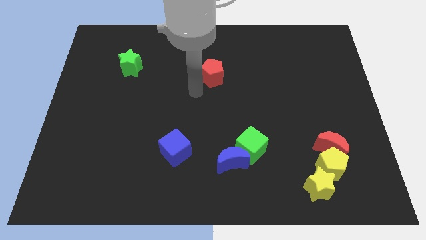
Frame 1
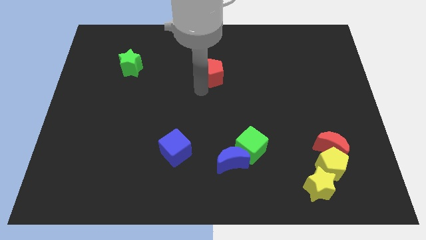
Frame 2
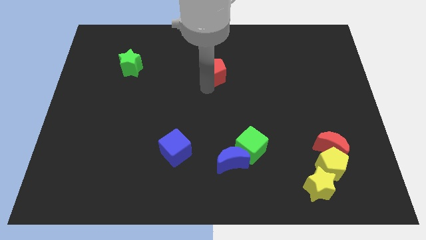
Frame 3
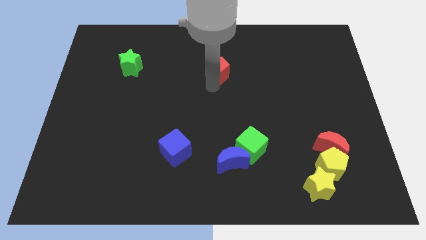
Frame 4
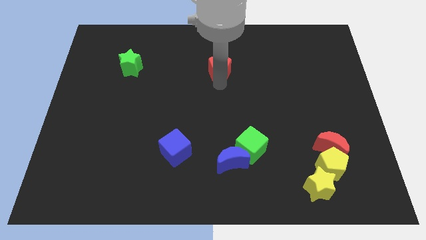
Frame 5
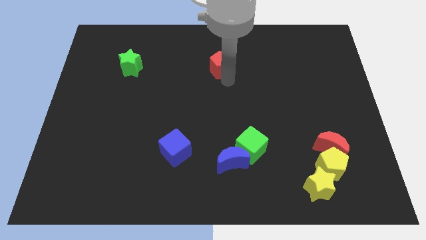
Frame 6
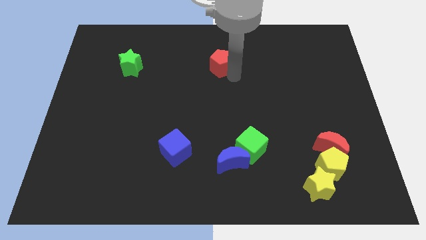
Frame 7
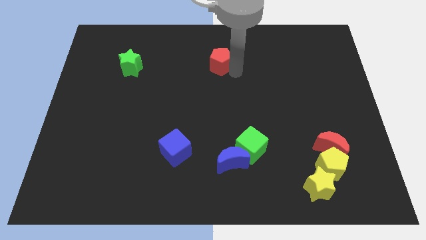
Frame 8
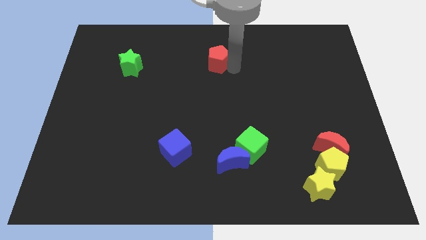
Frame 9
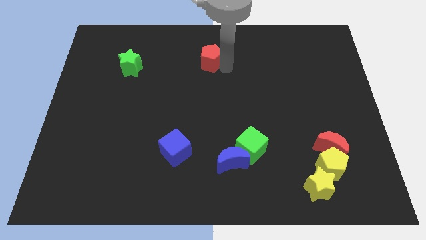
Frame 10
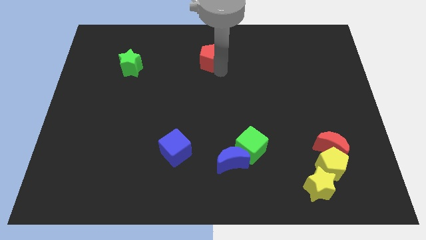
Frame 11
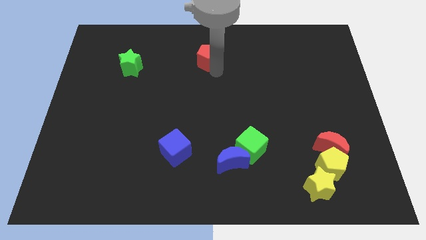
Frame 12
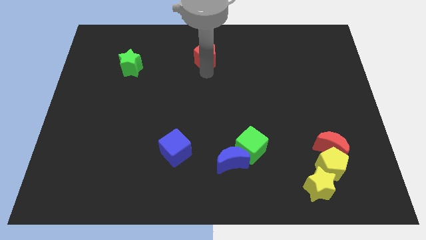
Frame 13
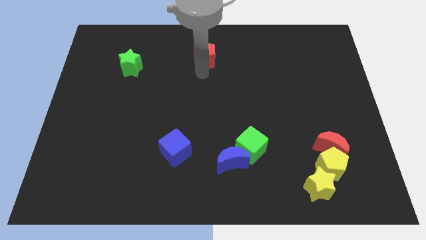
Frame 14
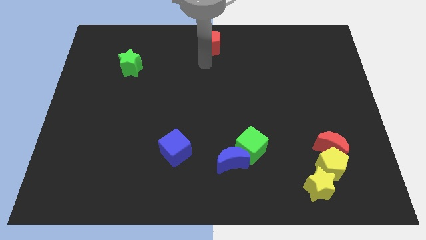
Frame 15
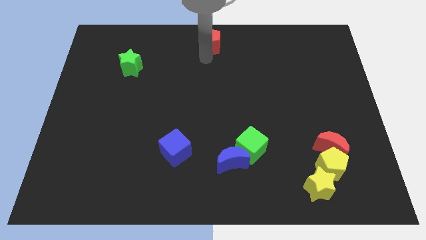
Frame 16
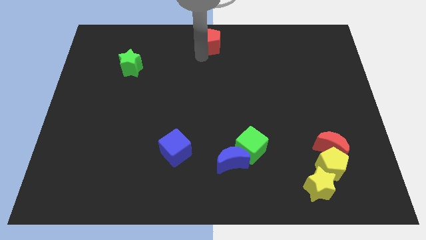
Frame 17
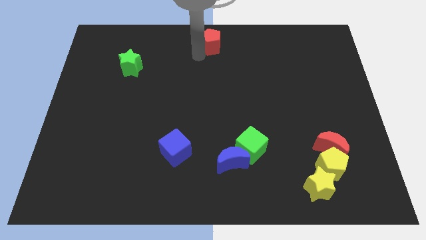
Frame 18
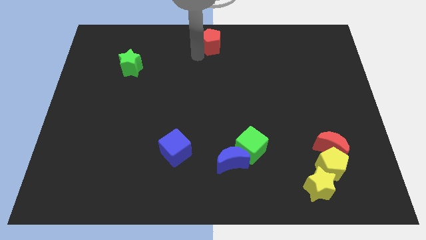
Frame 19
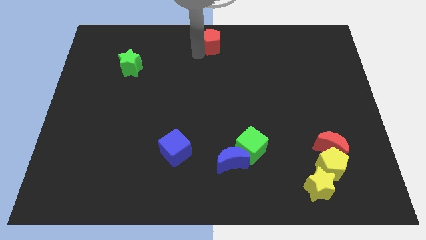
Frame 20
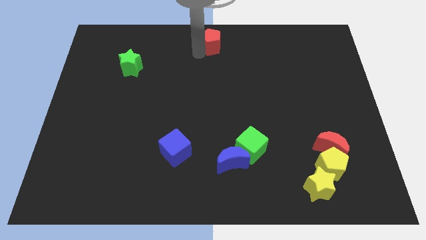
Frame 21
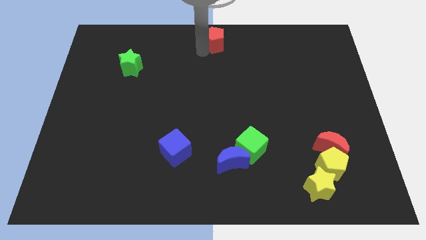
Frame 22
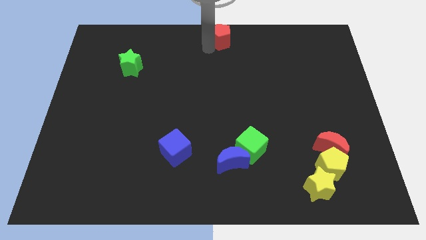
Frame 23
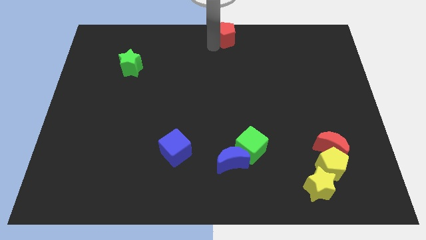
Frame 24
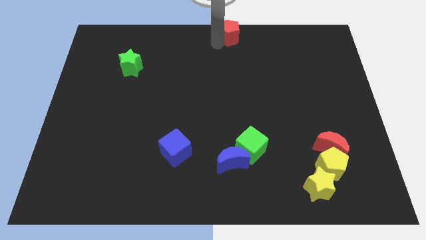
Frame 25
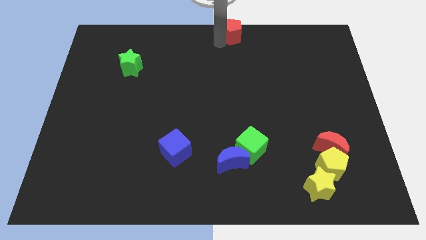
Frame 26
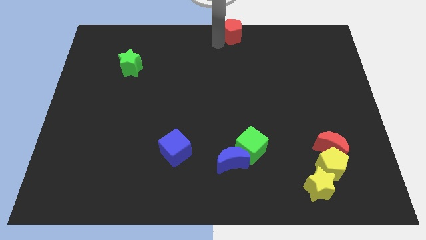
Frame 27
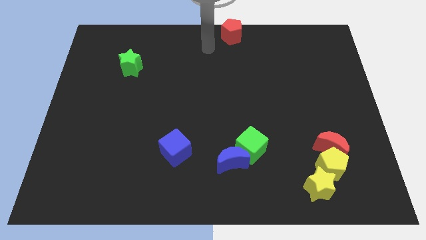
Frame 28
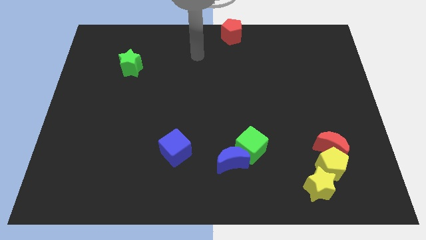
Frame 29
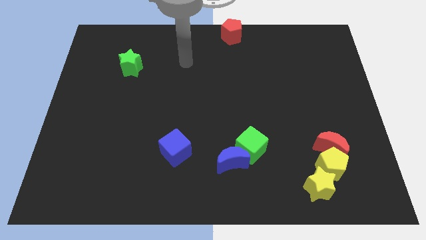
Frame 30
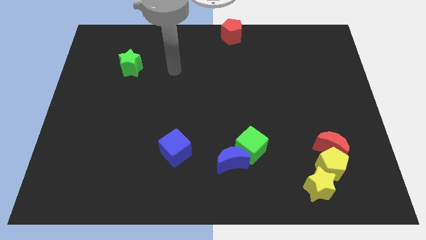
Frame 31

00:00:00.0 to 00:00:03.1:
push the red pentagon to the top center of the board

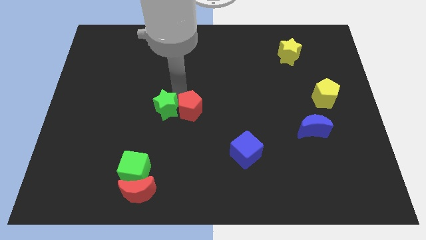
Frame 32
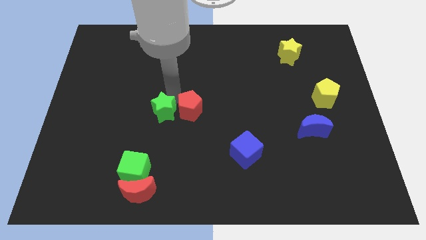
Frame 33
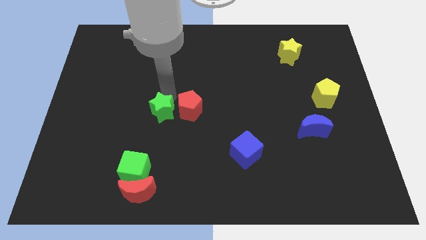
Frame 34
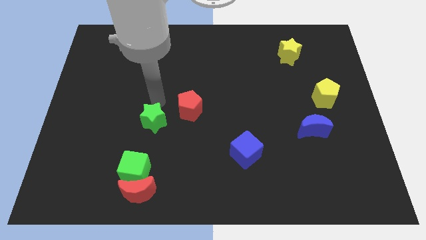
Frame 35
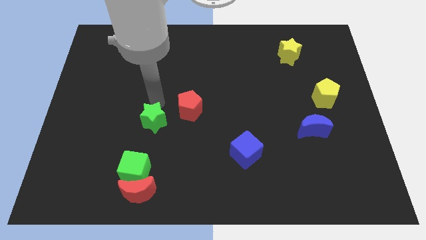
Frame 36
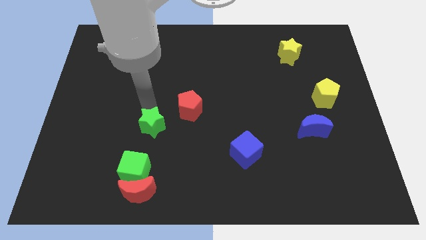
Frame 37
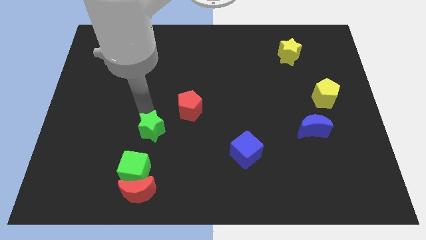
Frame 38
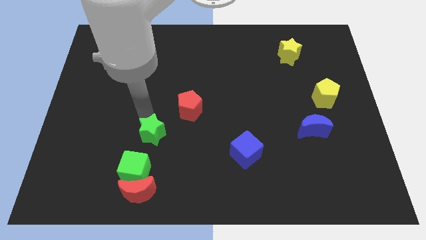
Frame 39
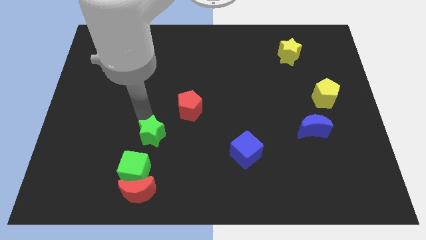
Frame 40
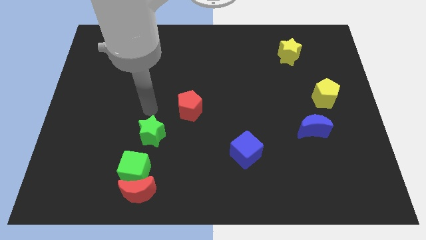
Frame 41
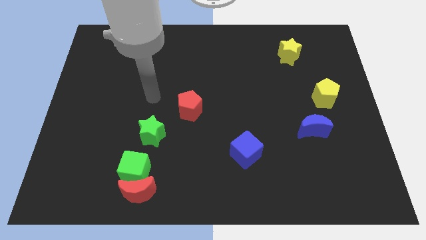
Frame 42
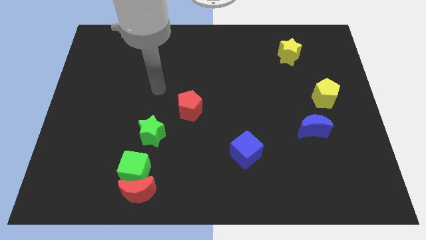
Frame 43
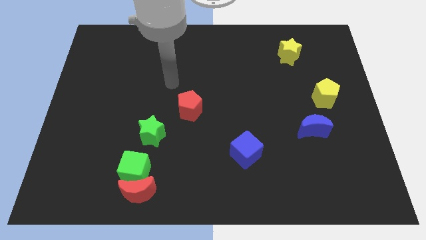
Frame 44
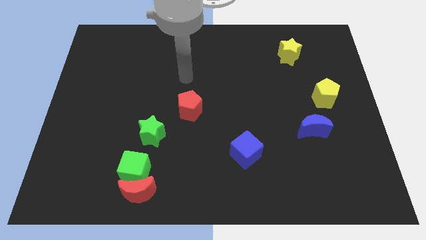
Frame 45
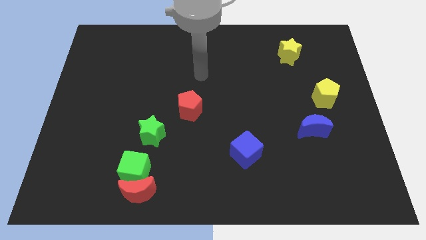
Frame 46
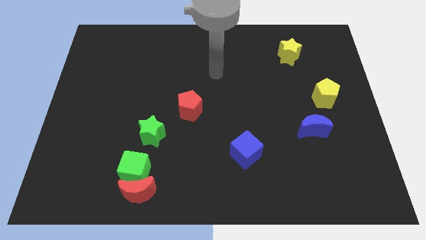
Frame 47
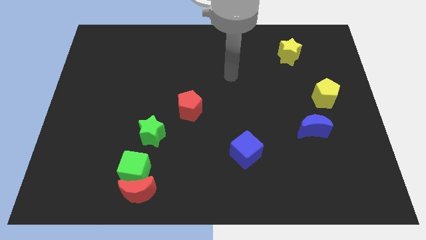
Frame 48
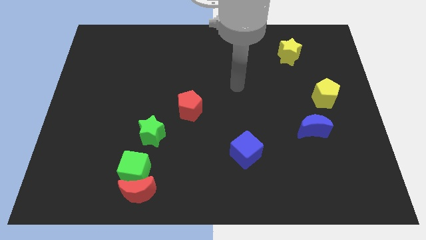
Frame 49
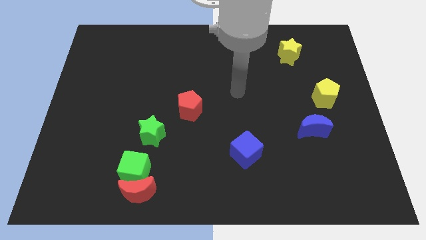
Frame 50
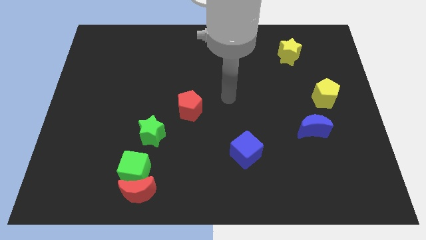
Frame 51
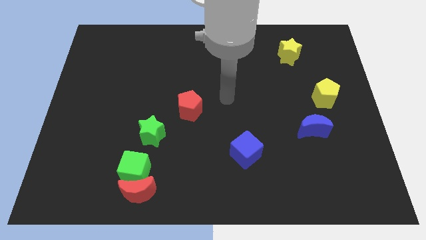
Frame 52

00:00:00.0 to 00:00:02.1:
move green star towards the green cube

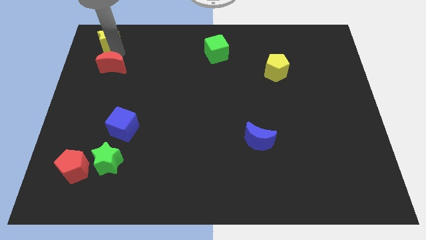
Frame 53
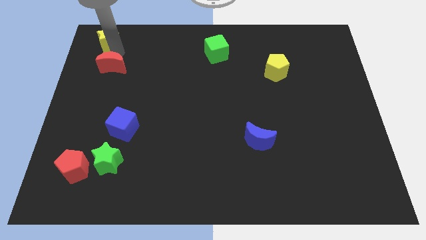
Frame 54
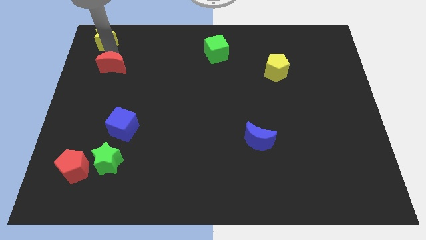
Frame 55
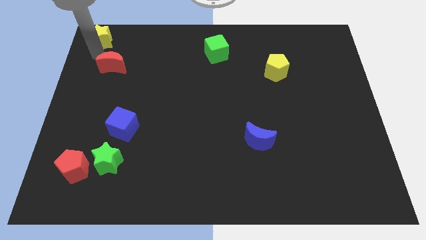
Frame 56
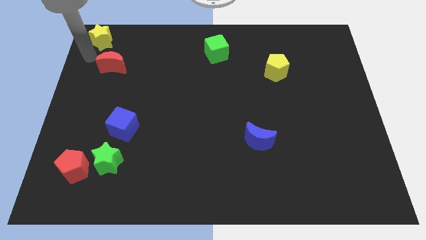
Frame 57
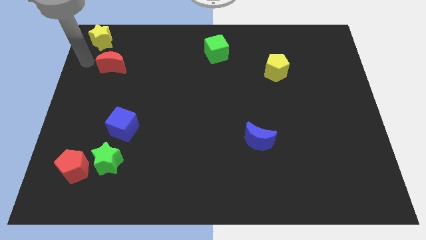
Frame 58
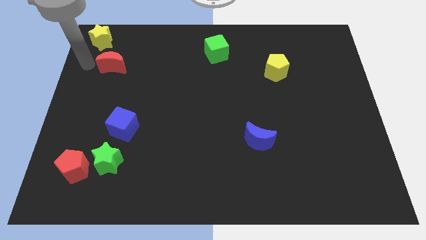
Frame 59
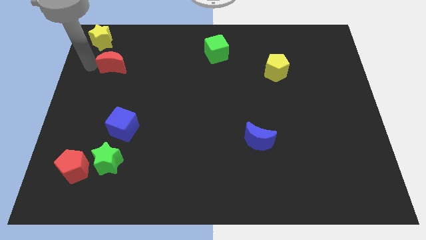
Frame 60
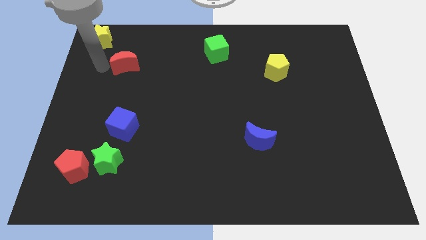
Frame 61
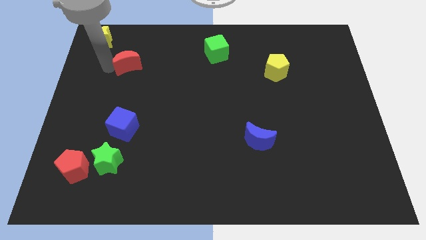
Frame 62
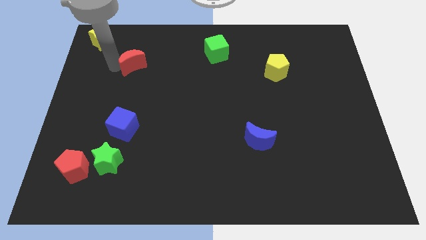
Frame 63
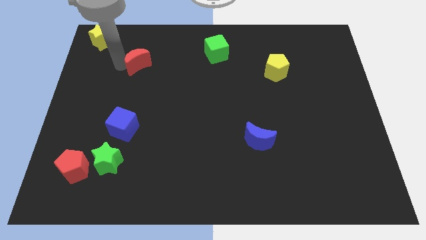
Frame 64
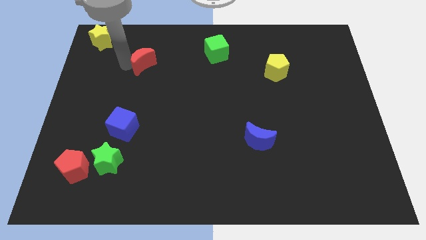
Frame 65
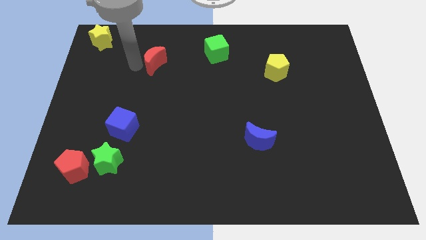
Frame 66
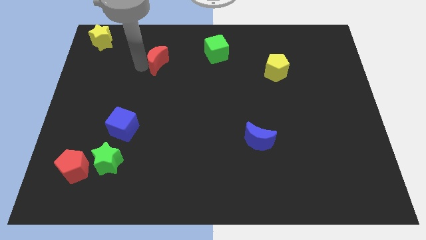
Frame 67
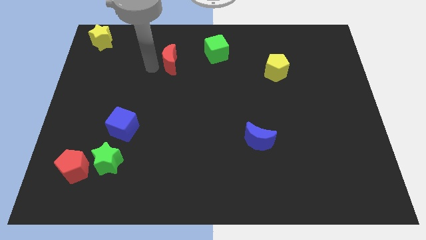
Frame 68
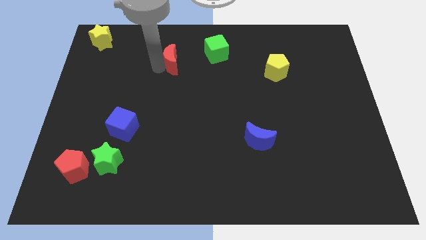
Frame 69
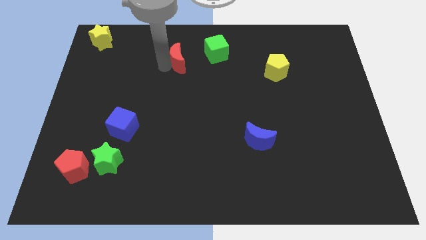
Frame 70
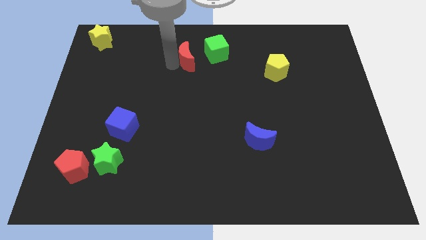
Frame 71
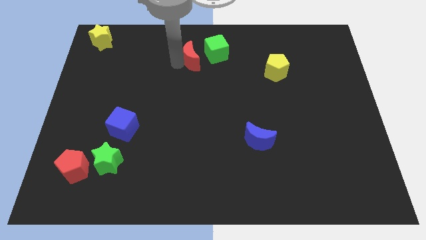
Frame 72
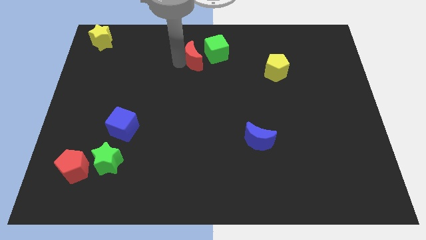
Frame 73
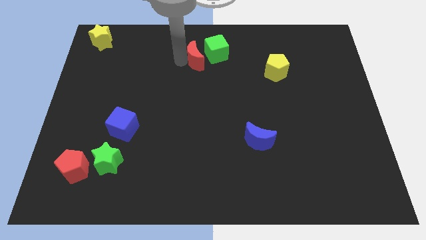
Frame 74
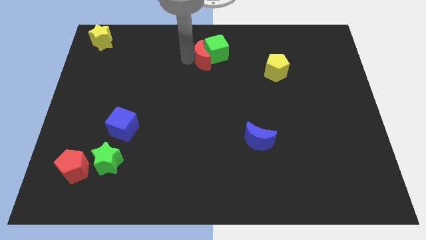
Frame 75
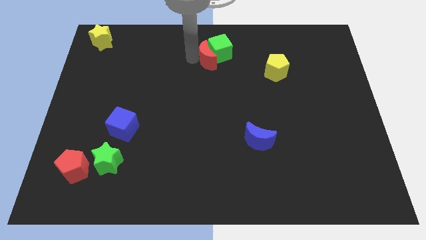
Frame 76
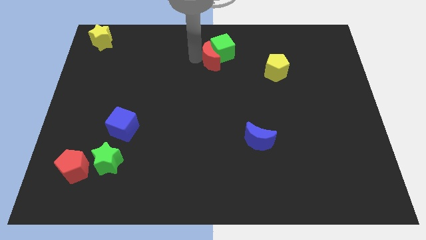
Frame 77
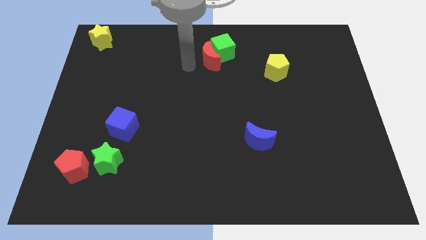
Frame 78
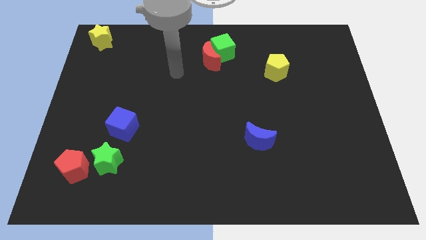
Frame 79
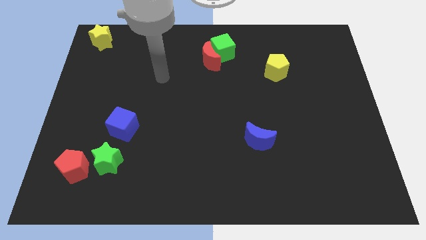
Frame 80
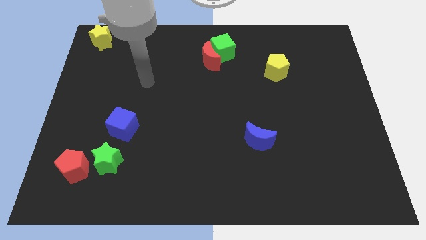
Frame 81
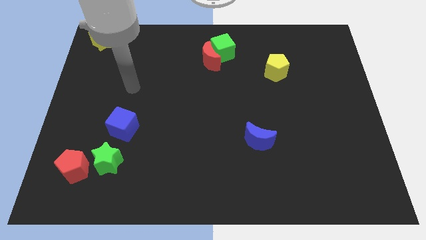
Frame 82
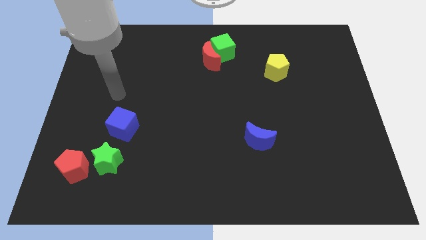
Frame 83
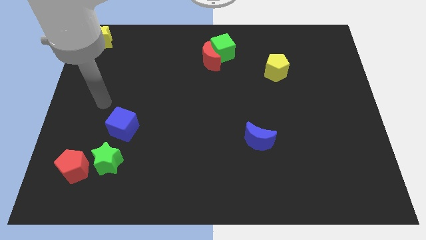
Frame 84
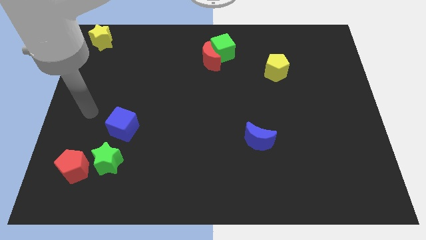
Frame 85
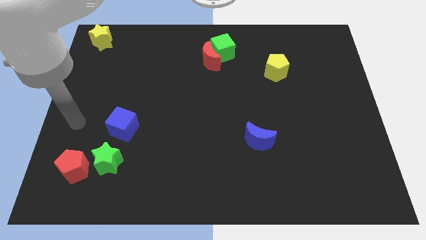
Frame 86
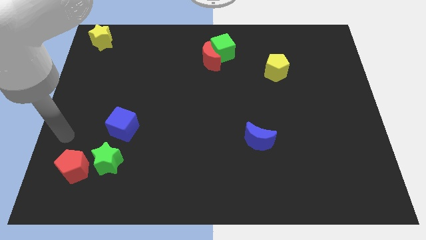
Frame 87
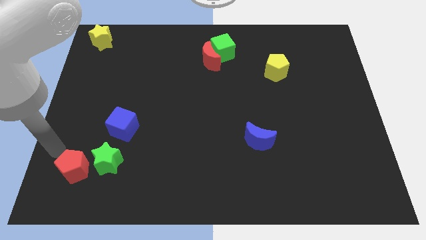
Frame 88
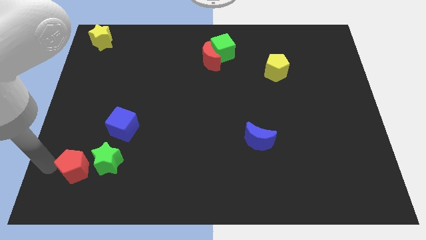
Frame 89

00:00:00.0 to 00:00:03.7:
push the red moon into the green cube

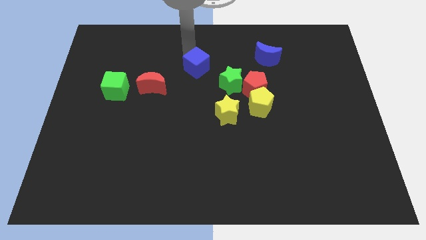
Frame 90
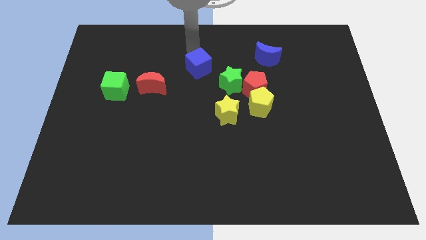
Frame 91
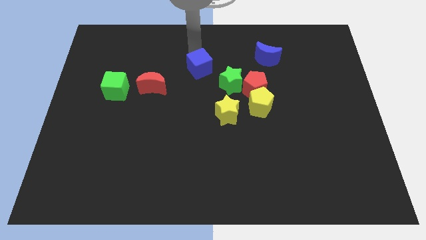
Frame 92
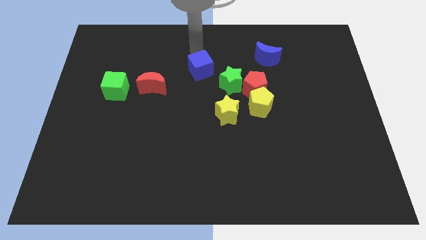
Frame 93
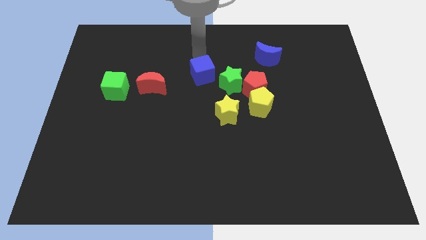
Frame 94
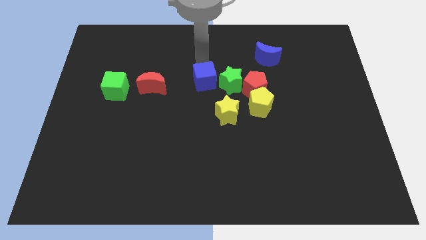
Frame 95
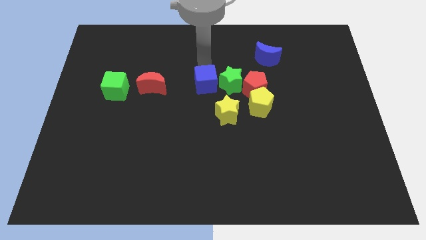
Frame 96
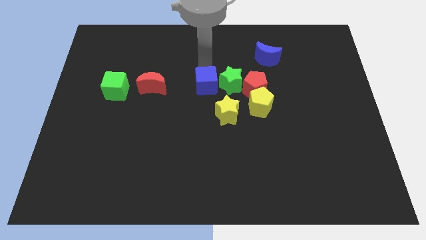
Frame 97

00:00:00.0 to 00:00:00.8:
push blue cube downwards
